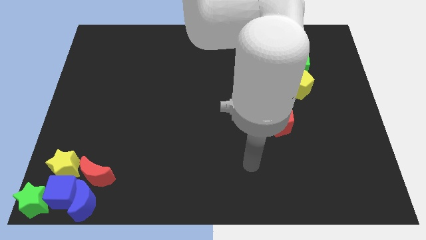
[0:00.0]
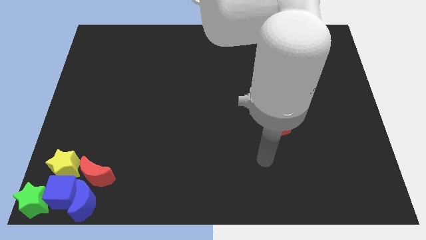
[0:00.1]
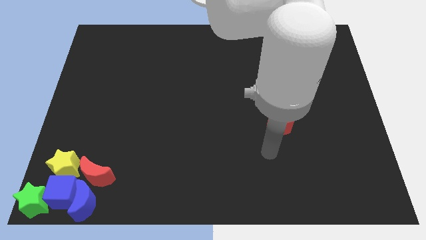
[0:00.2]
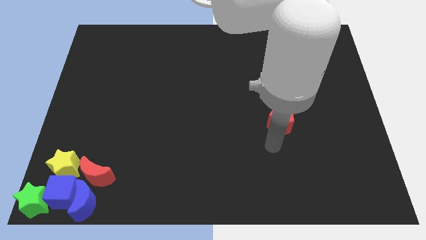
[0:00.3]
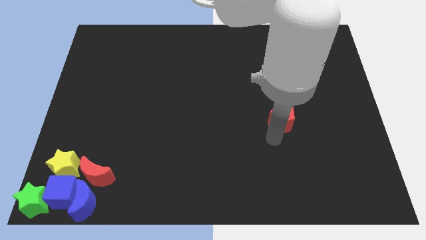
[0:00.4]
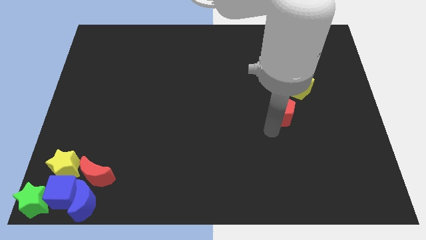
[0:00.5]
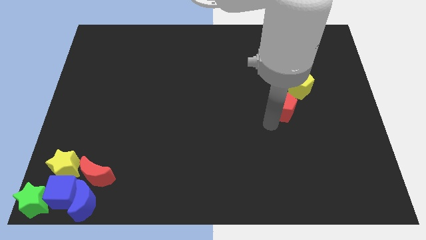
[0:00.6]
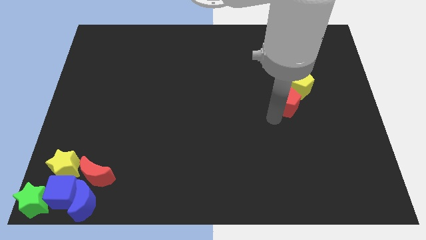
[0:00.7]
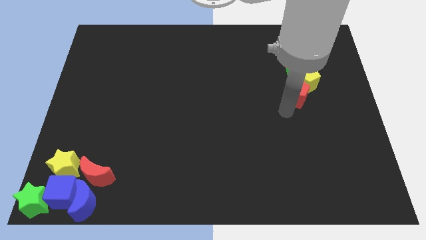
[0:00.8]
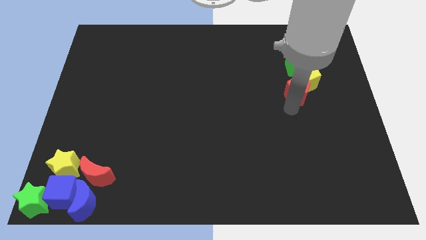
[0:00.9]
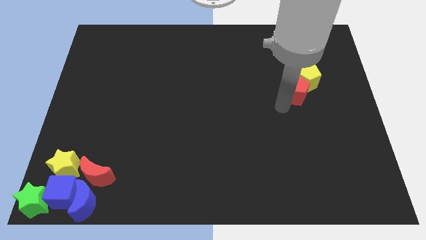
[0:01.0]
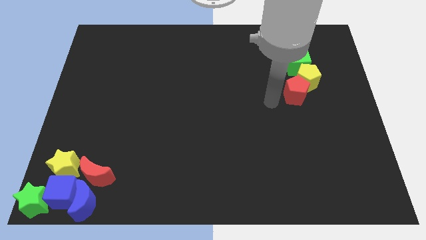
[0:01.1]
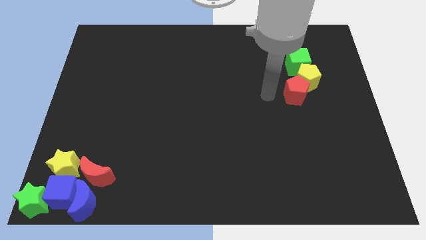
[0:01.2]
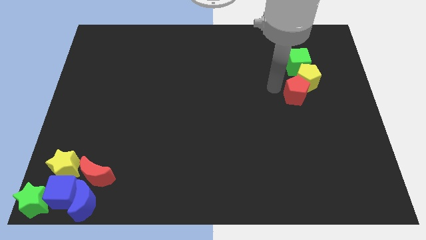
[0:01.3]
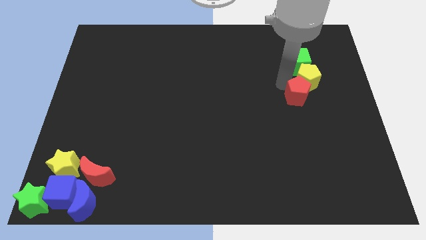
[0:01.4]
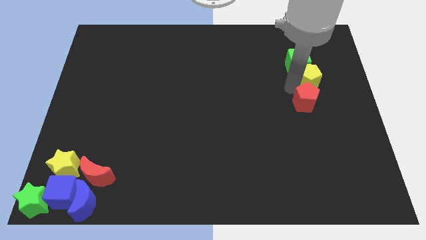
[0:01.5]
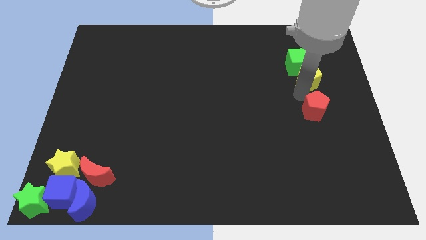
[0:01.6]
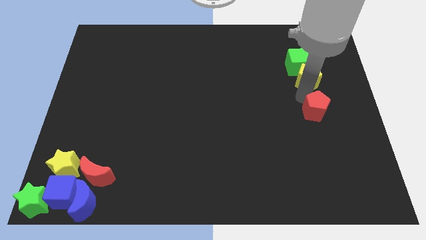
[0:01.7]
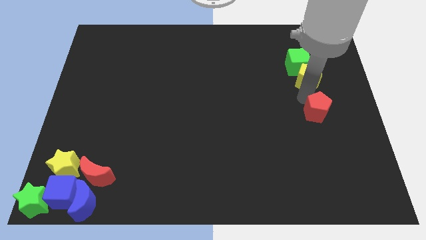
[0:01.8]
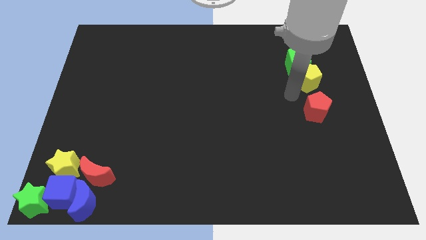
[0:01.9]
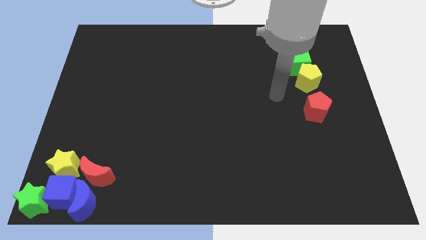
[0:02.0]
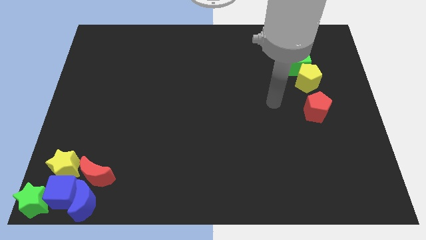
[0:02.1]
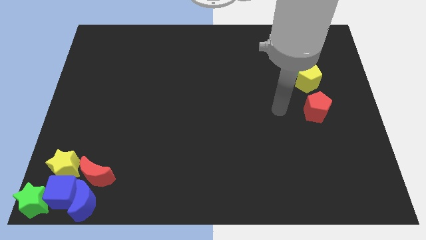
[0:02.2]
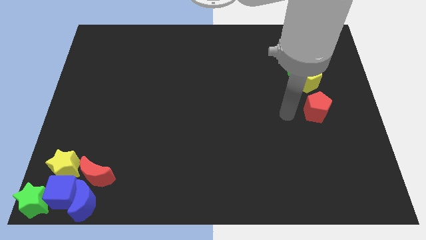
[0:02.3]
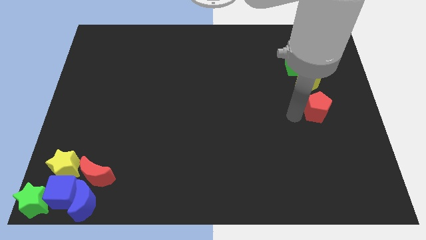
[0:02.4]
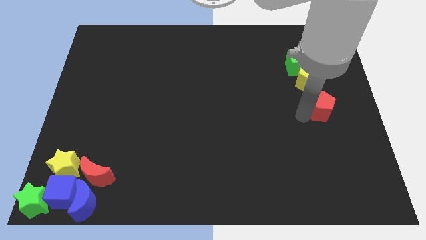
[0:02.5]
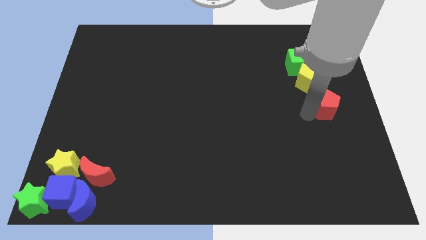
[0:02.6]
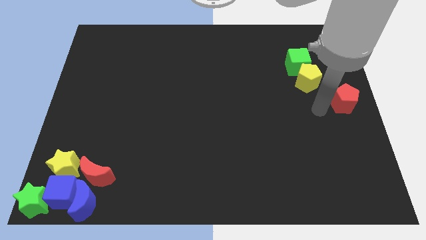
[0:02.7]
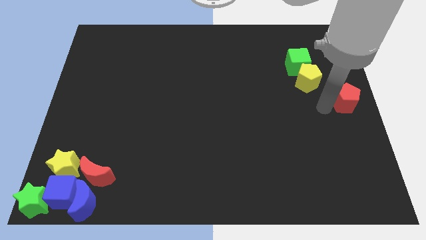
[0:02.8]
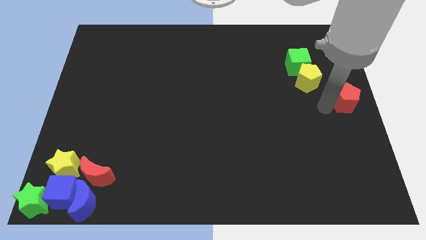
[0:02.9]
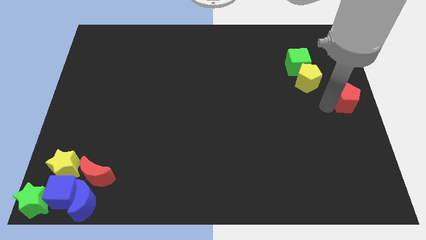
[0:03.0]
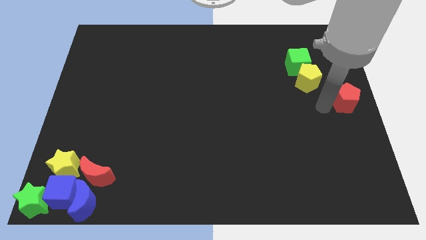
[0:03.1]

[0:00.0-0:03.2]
place the red pentagon at the center right side of the board

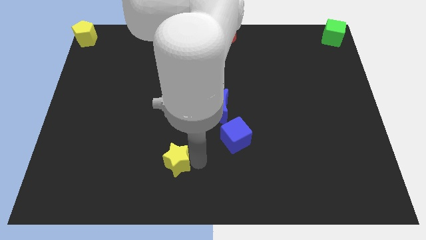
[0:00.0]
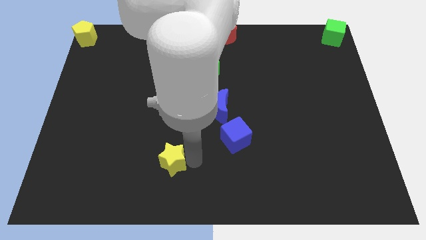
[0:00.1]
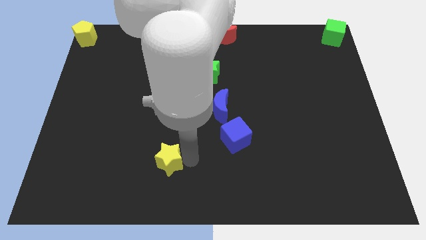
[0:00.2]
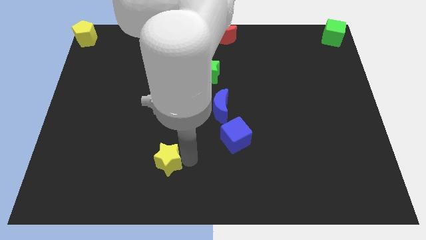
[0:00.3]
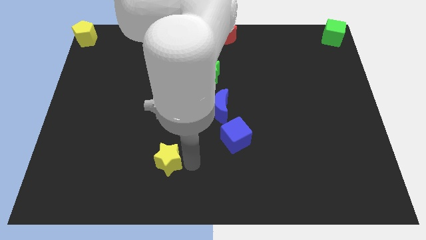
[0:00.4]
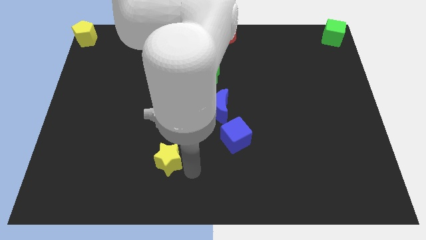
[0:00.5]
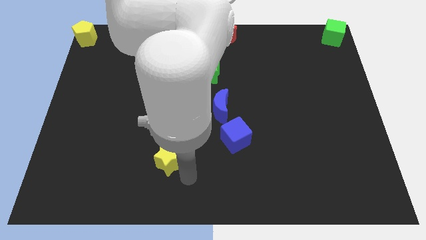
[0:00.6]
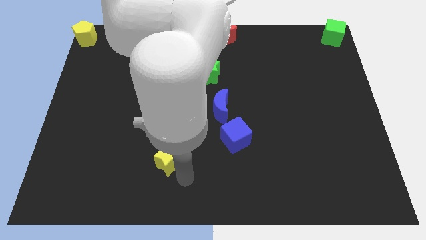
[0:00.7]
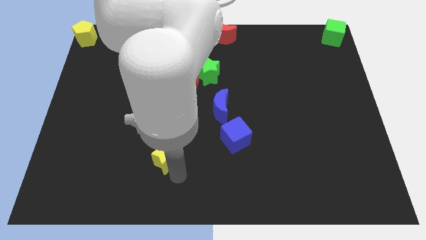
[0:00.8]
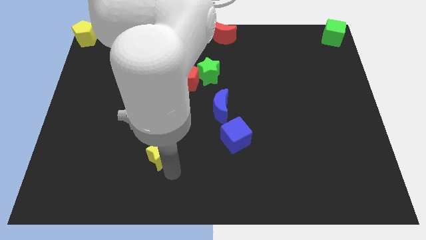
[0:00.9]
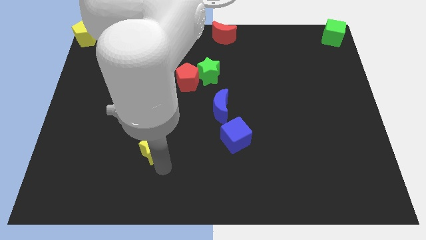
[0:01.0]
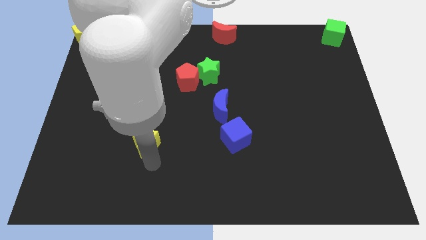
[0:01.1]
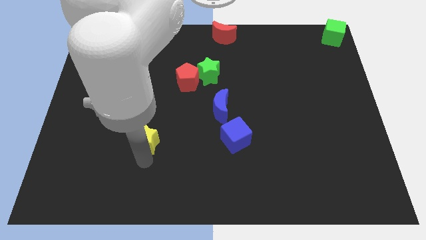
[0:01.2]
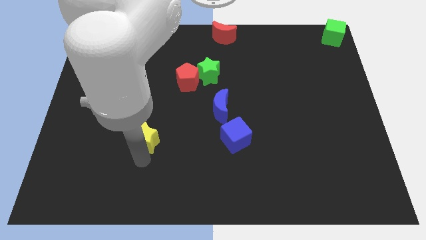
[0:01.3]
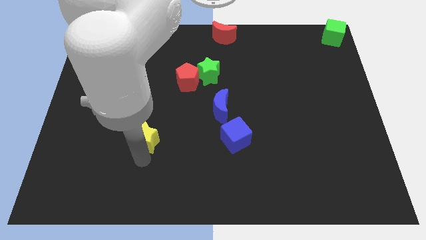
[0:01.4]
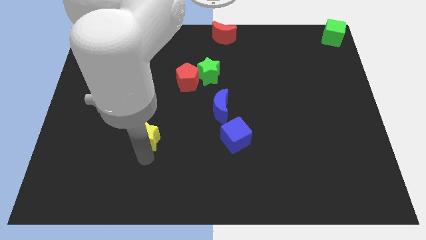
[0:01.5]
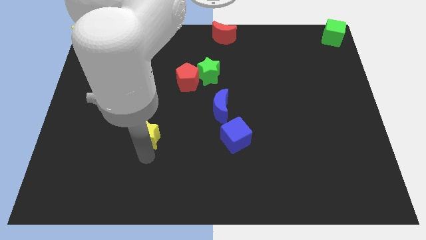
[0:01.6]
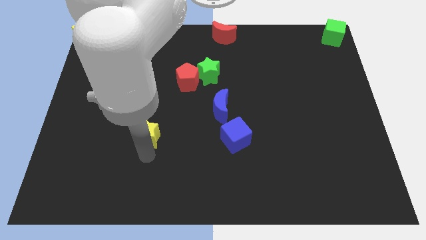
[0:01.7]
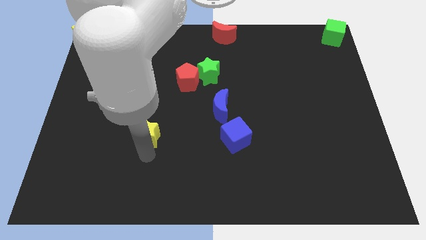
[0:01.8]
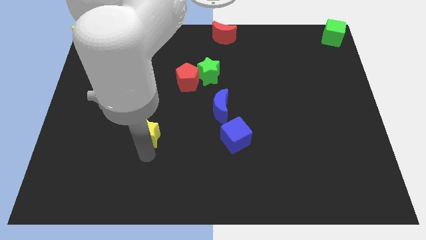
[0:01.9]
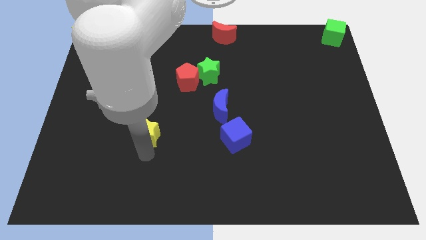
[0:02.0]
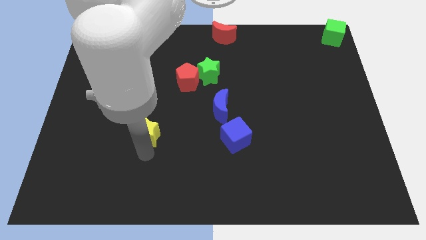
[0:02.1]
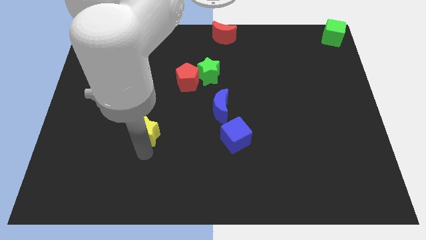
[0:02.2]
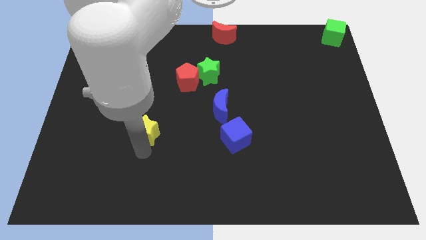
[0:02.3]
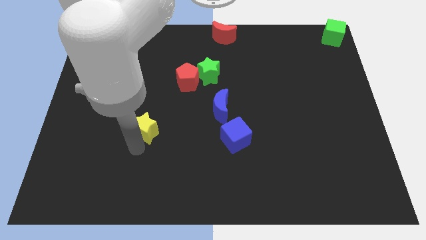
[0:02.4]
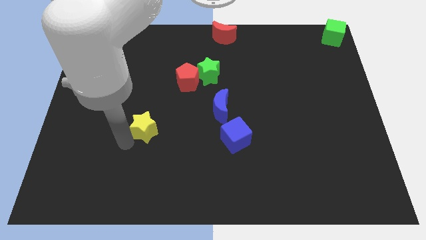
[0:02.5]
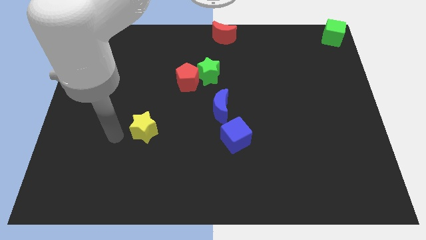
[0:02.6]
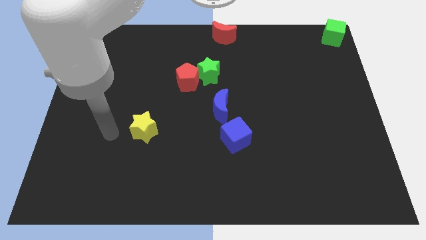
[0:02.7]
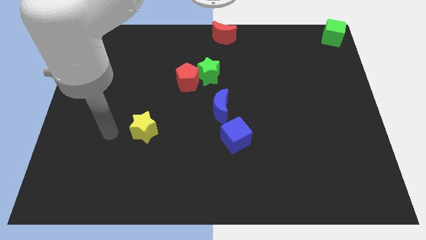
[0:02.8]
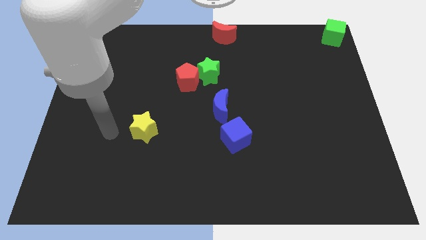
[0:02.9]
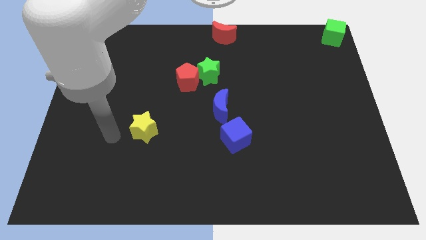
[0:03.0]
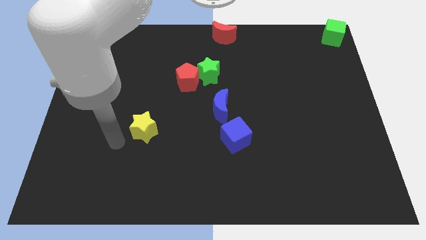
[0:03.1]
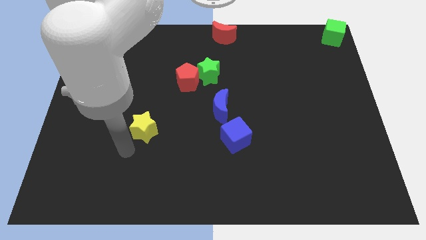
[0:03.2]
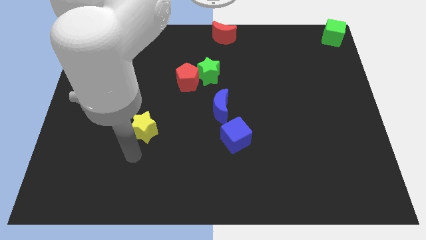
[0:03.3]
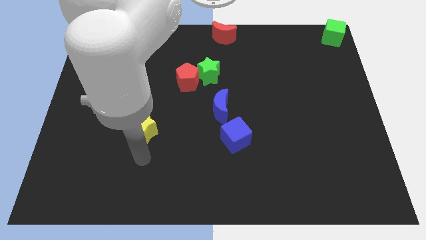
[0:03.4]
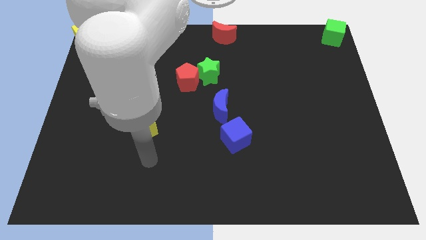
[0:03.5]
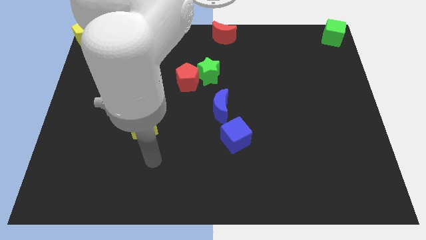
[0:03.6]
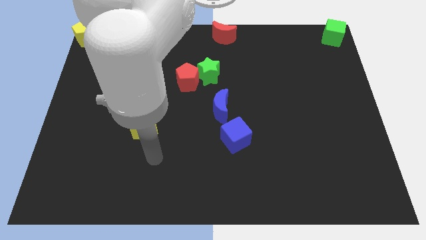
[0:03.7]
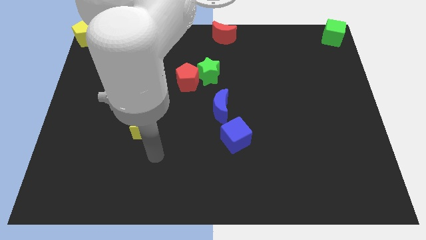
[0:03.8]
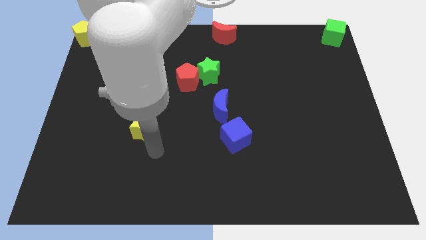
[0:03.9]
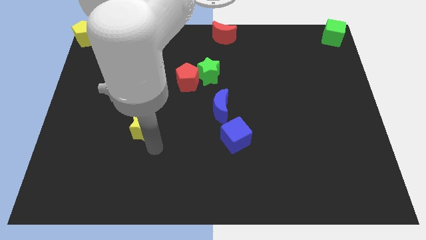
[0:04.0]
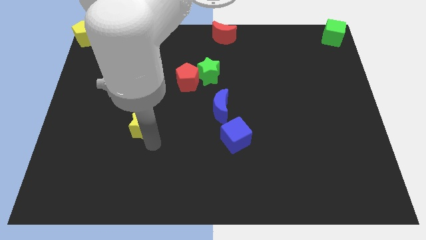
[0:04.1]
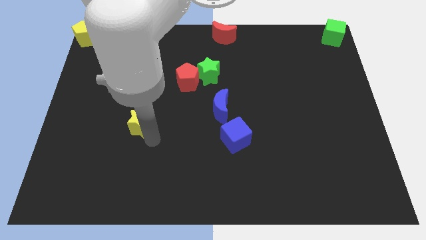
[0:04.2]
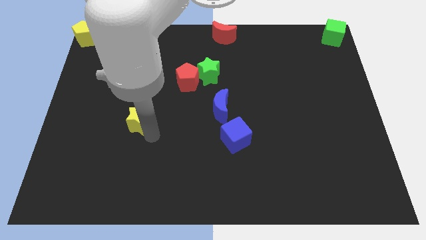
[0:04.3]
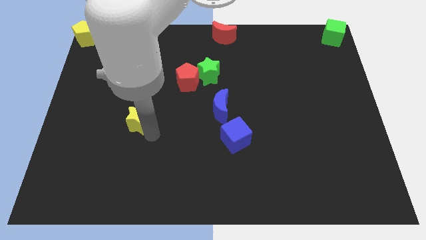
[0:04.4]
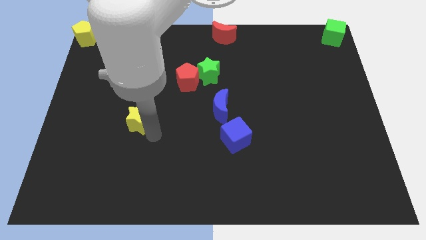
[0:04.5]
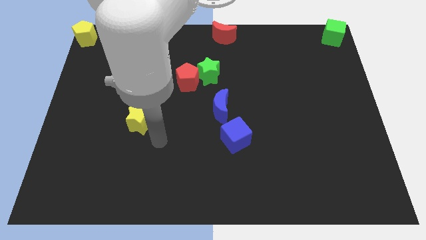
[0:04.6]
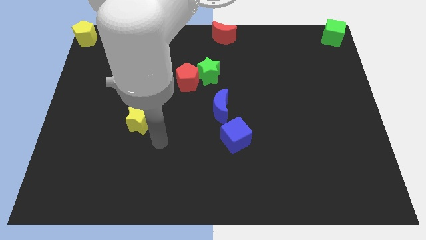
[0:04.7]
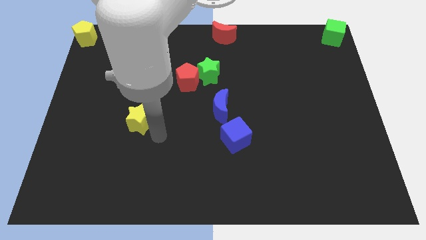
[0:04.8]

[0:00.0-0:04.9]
move the yellow star to the bottom left of red pentagon

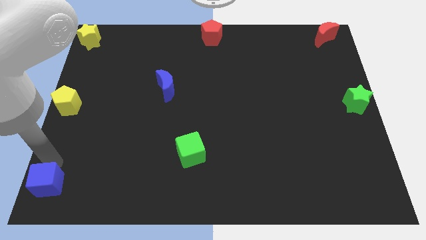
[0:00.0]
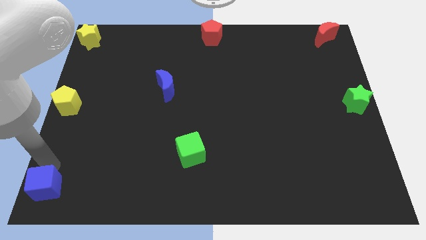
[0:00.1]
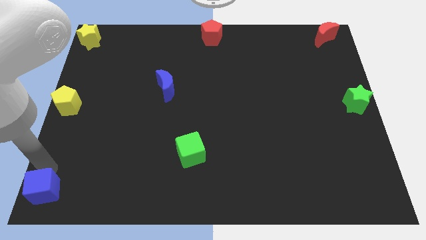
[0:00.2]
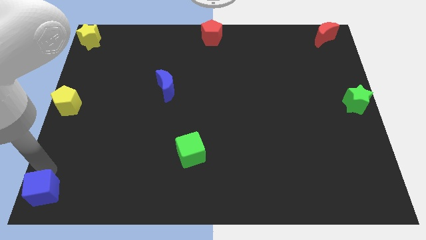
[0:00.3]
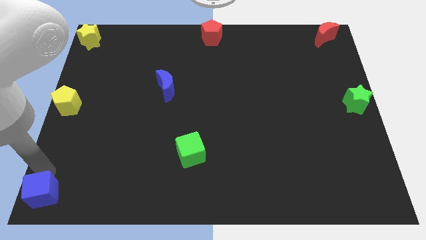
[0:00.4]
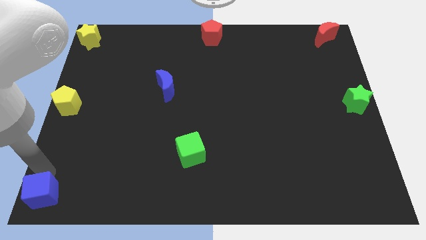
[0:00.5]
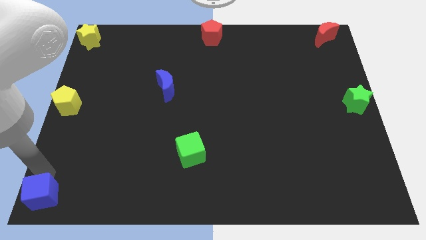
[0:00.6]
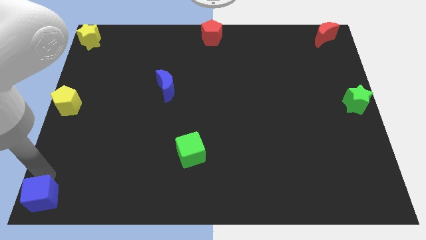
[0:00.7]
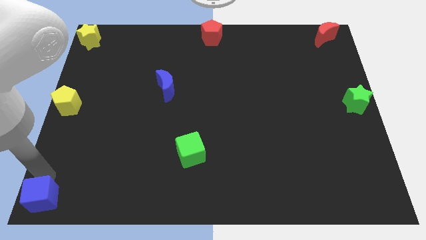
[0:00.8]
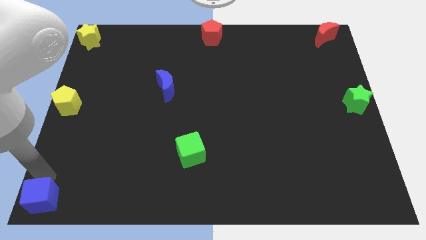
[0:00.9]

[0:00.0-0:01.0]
move the blue cube to the left bottom corner
